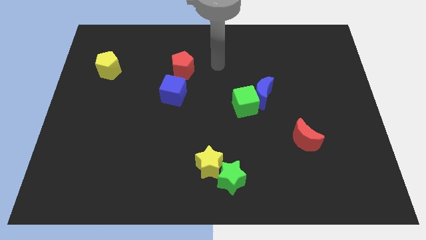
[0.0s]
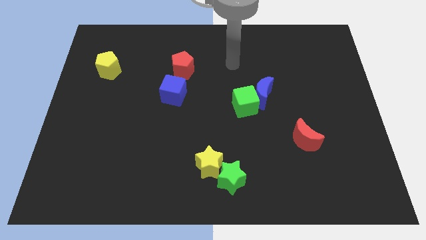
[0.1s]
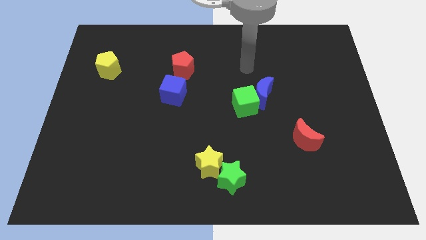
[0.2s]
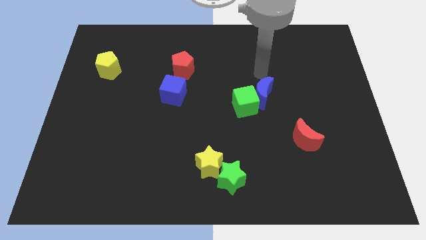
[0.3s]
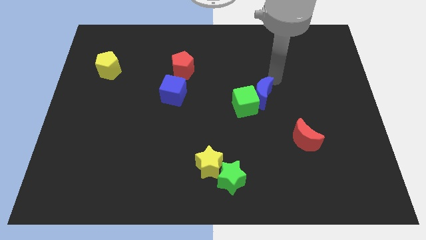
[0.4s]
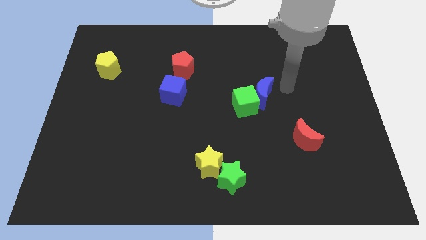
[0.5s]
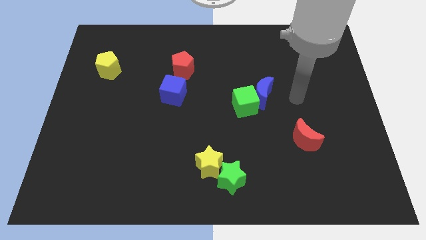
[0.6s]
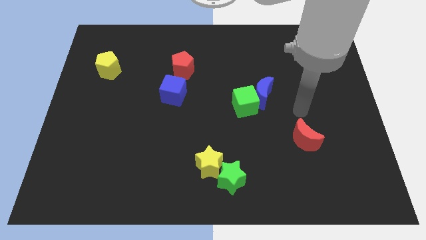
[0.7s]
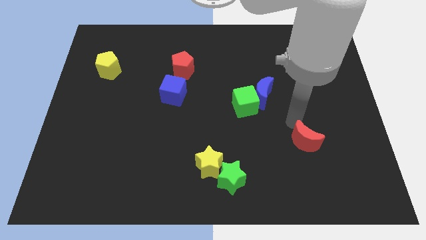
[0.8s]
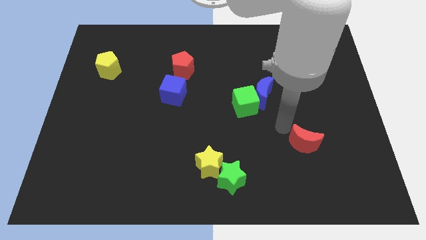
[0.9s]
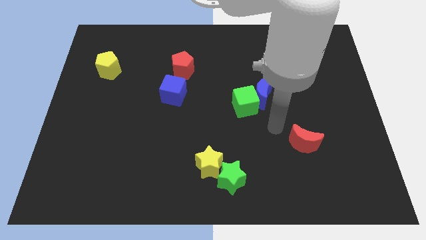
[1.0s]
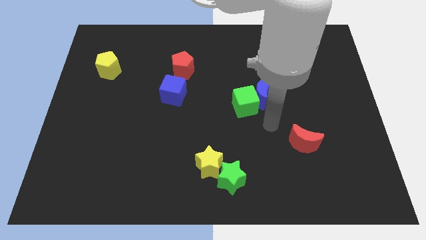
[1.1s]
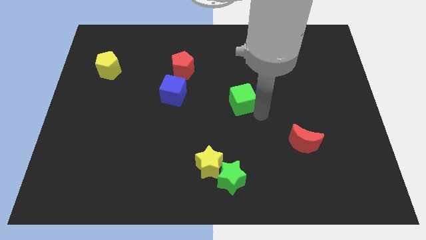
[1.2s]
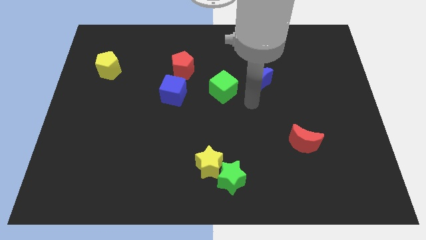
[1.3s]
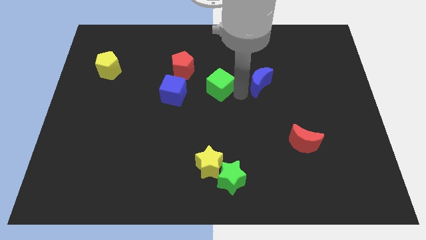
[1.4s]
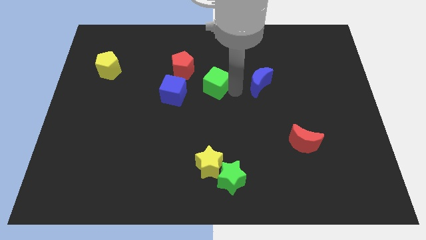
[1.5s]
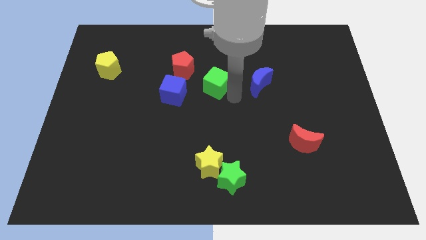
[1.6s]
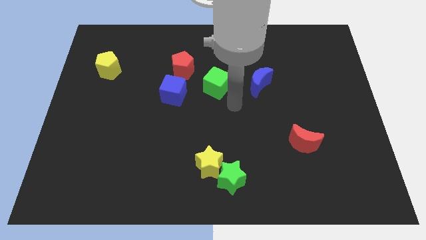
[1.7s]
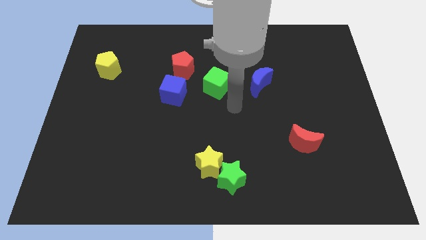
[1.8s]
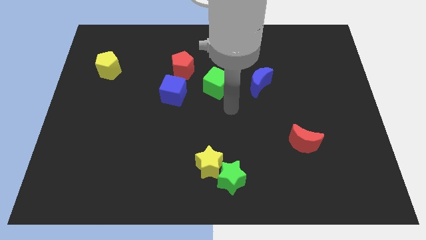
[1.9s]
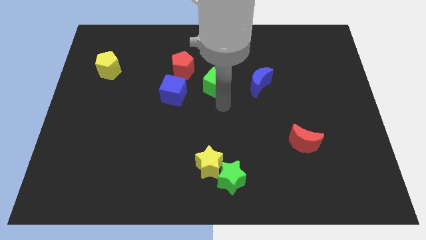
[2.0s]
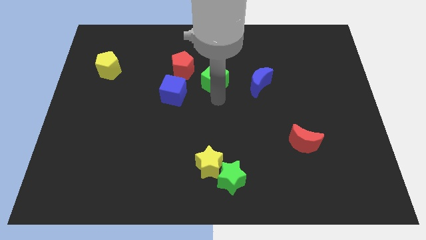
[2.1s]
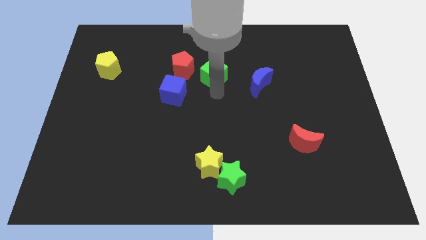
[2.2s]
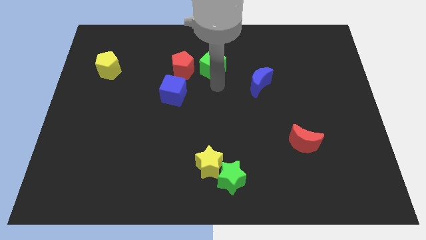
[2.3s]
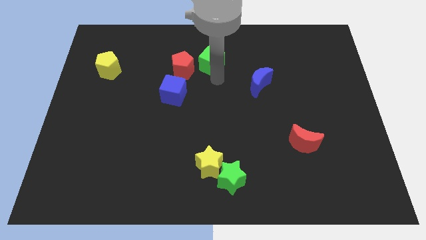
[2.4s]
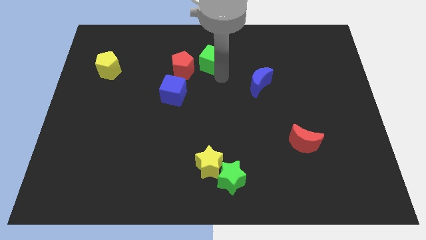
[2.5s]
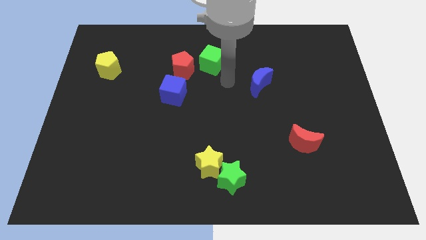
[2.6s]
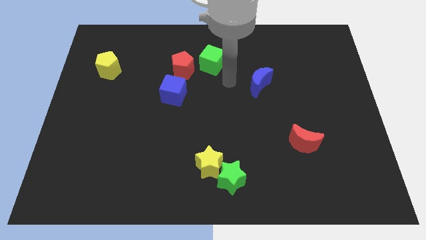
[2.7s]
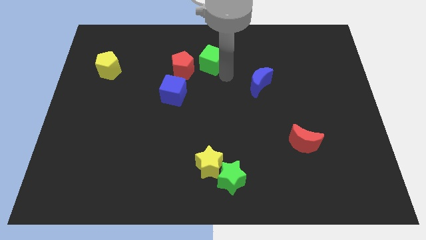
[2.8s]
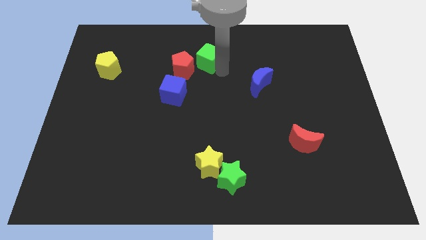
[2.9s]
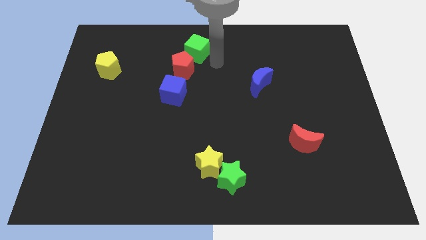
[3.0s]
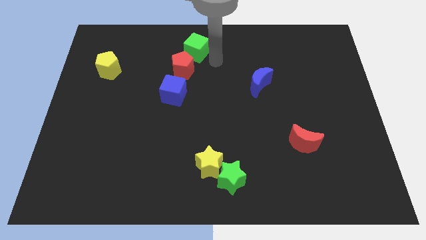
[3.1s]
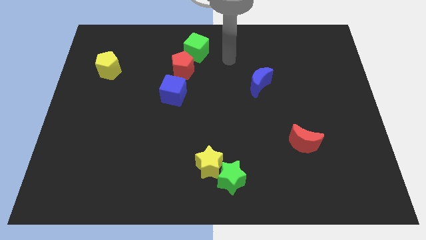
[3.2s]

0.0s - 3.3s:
push the green cube to the top right side of the red pentagon

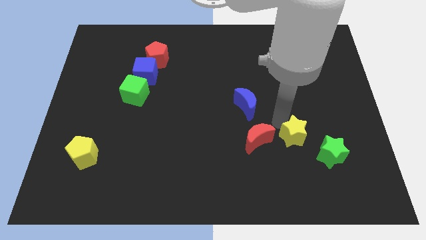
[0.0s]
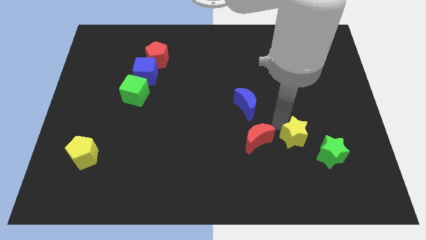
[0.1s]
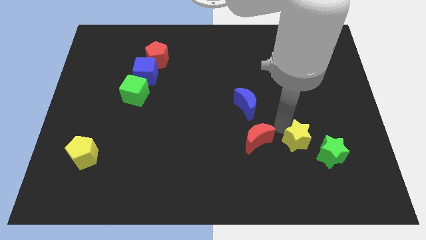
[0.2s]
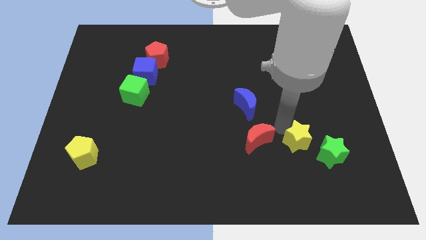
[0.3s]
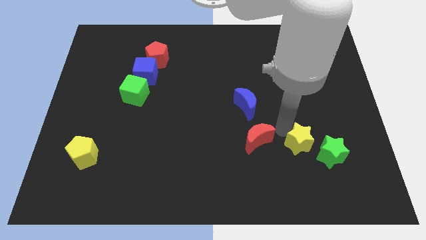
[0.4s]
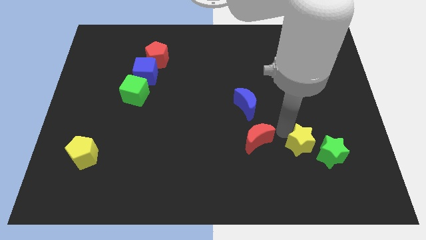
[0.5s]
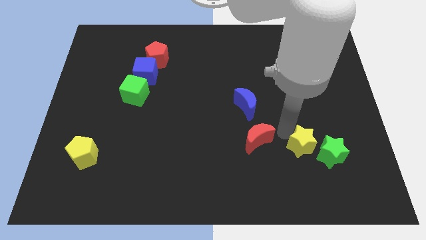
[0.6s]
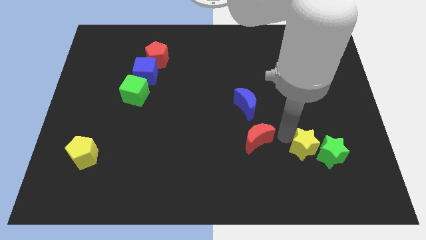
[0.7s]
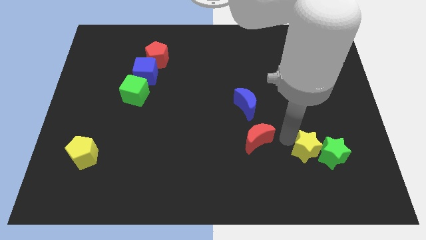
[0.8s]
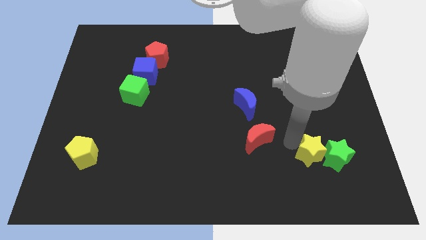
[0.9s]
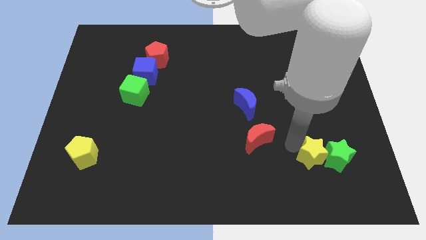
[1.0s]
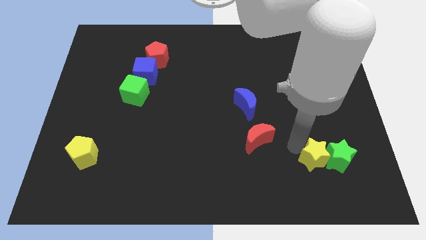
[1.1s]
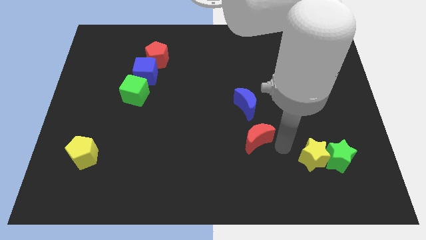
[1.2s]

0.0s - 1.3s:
move the yellow star into the green star

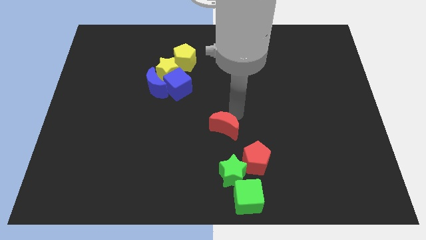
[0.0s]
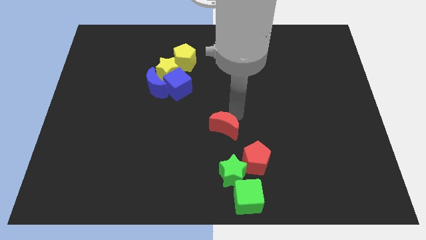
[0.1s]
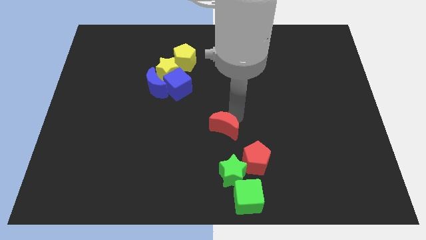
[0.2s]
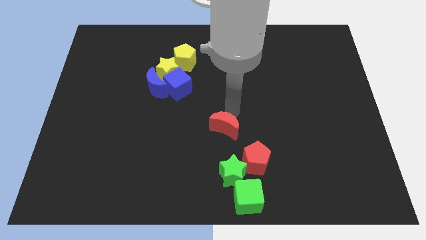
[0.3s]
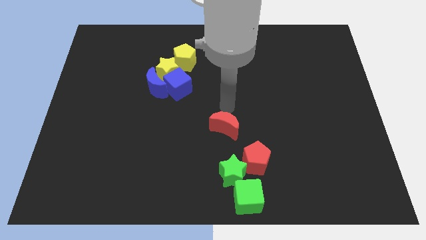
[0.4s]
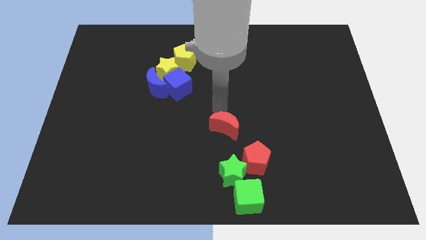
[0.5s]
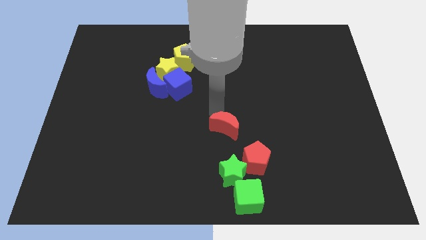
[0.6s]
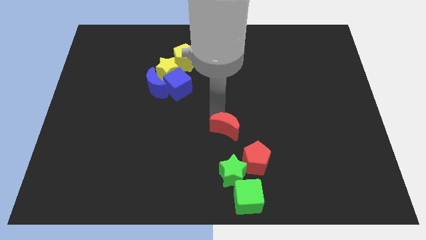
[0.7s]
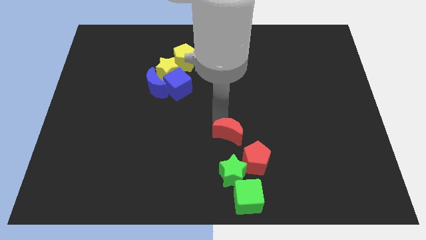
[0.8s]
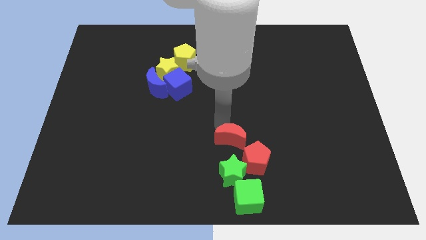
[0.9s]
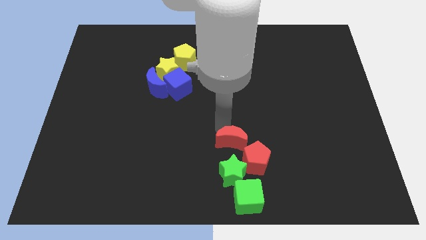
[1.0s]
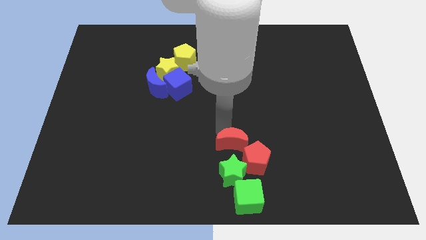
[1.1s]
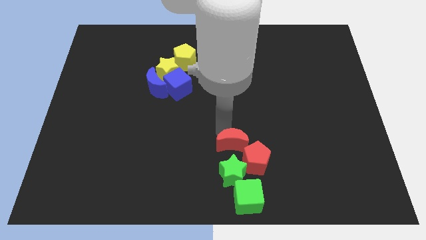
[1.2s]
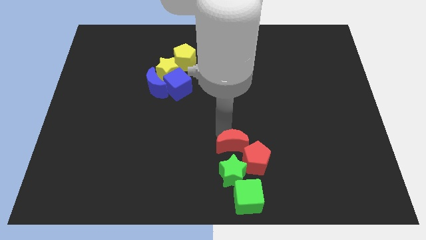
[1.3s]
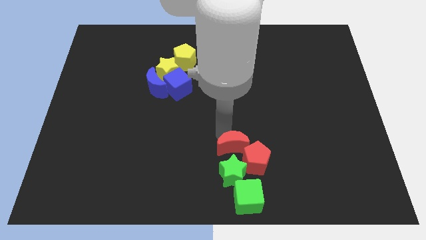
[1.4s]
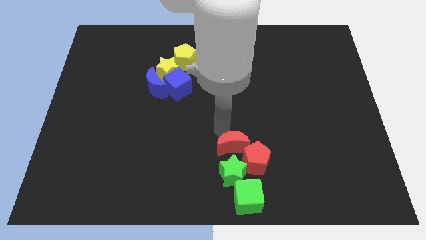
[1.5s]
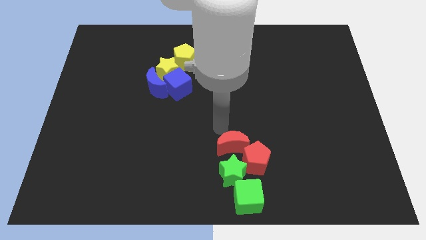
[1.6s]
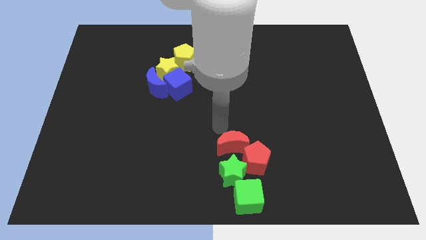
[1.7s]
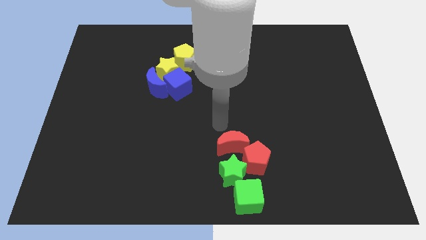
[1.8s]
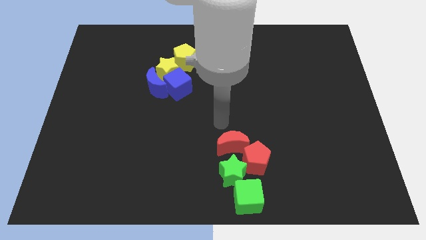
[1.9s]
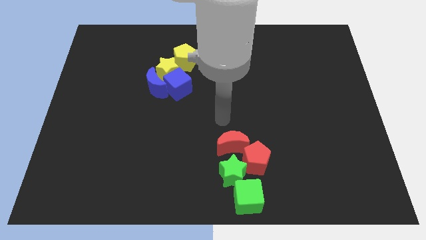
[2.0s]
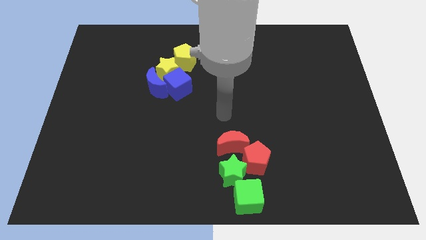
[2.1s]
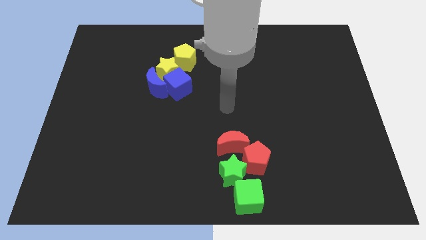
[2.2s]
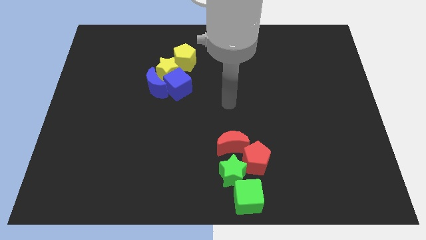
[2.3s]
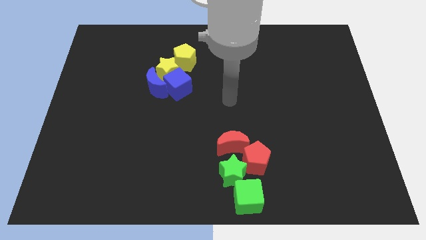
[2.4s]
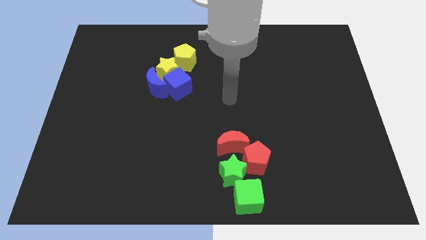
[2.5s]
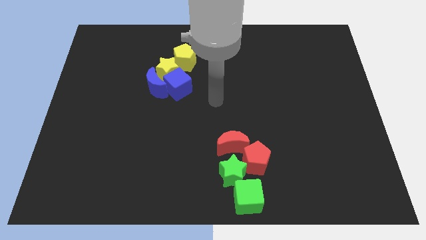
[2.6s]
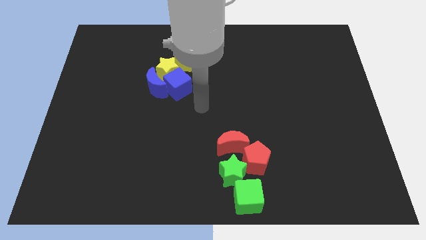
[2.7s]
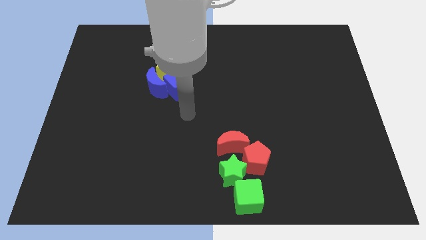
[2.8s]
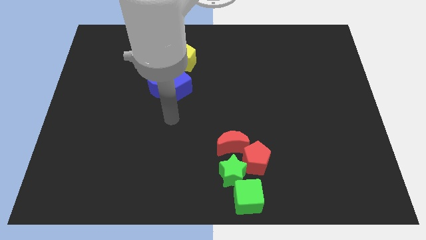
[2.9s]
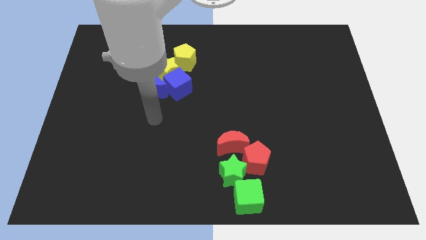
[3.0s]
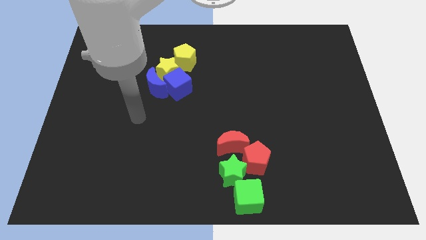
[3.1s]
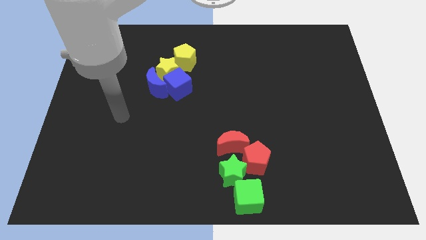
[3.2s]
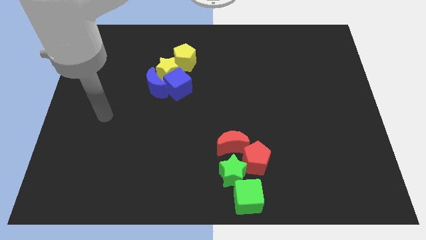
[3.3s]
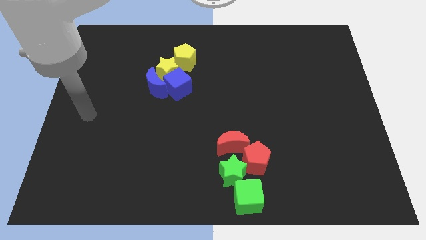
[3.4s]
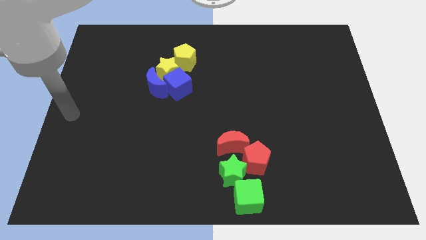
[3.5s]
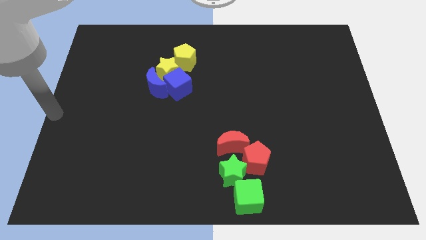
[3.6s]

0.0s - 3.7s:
push red moon close to the red pentagon

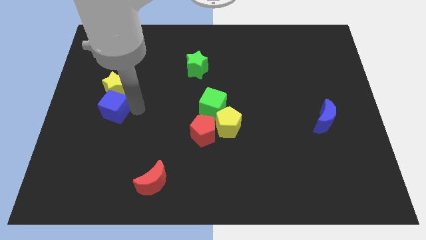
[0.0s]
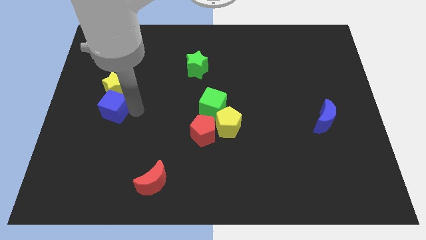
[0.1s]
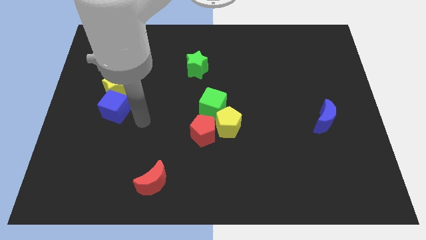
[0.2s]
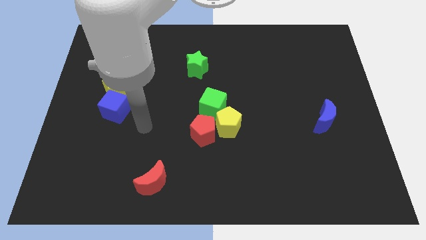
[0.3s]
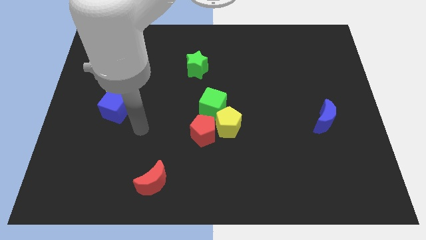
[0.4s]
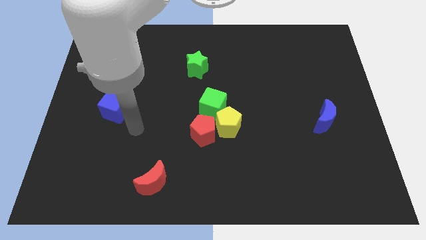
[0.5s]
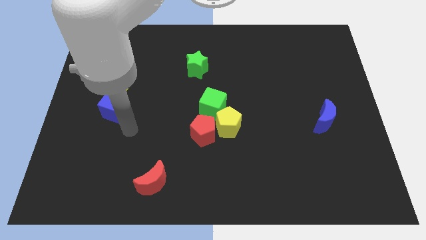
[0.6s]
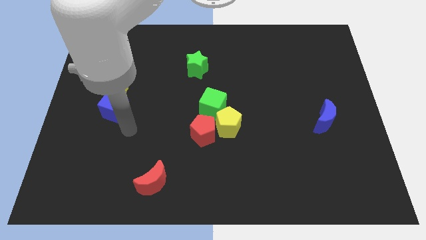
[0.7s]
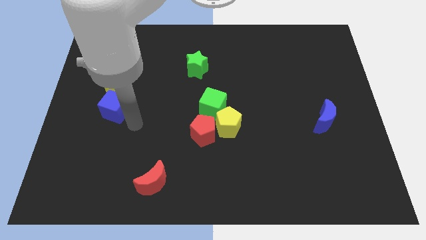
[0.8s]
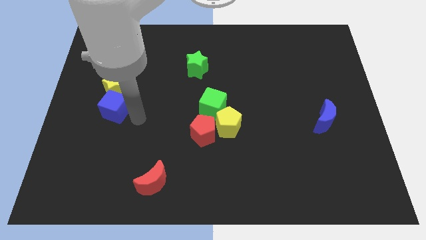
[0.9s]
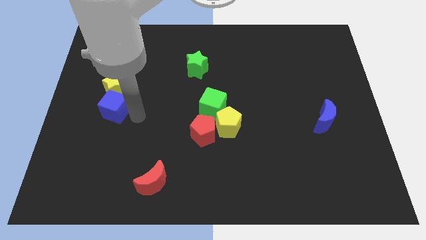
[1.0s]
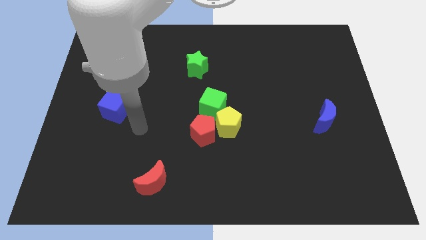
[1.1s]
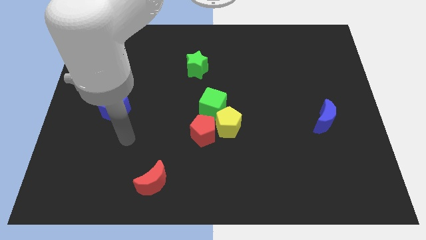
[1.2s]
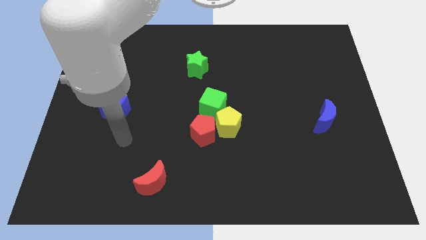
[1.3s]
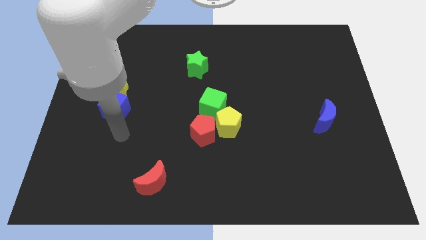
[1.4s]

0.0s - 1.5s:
place your arm below the blue cube
